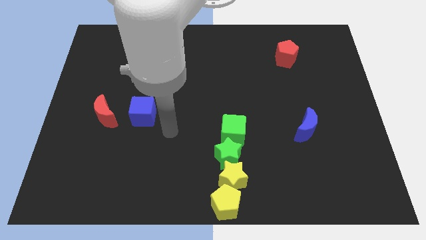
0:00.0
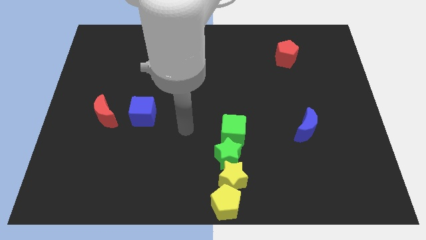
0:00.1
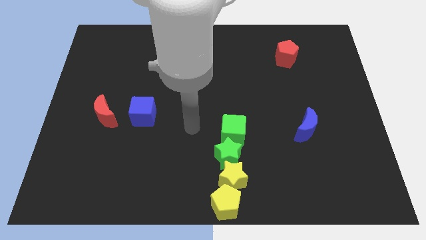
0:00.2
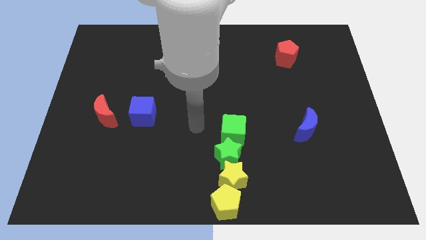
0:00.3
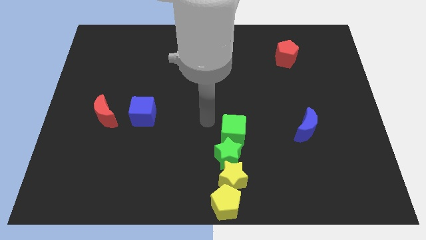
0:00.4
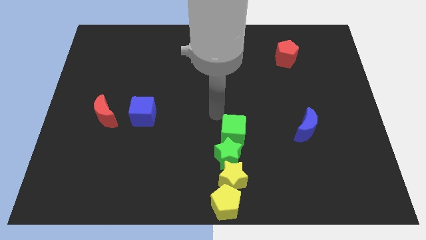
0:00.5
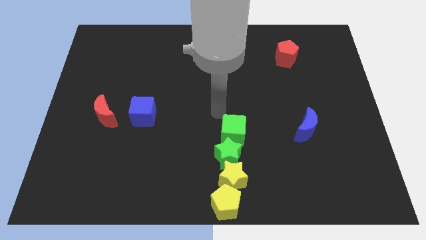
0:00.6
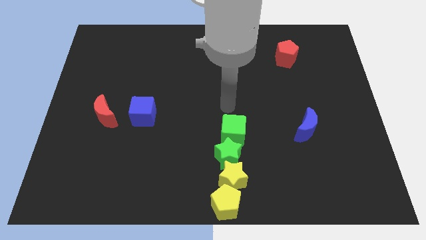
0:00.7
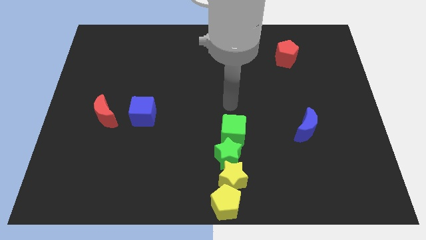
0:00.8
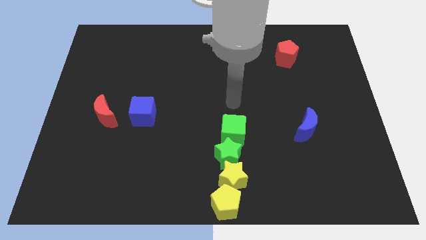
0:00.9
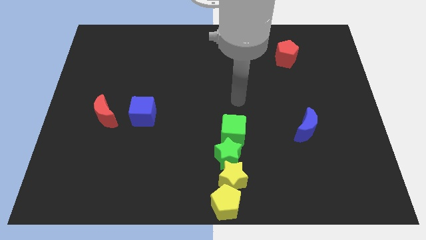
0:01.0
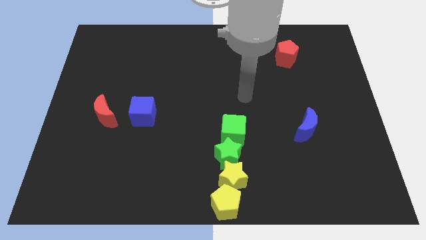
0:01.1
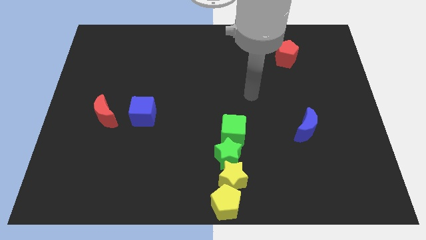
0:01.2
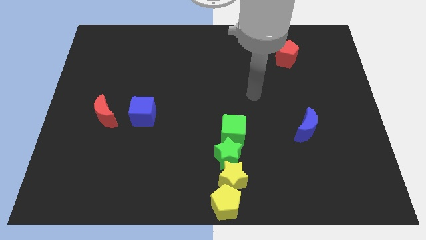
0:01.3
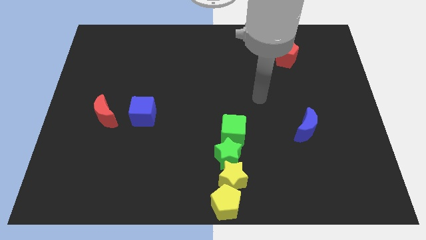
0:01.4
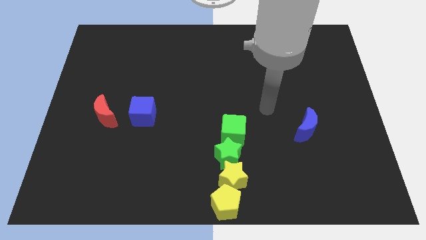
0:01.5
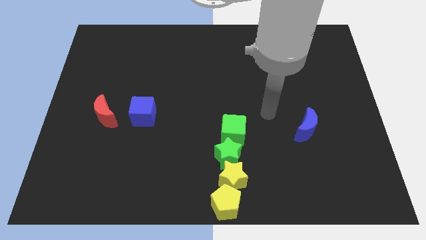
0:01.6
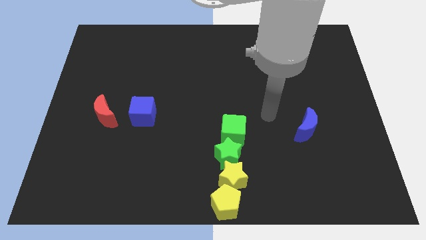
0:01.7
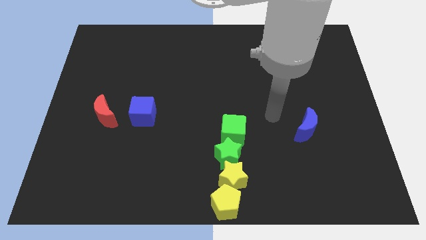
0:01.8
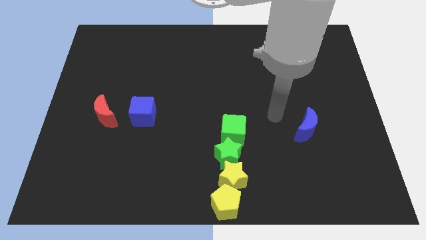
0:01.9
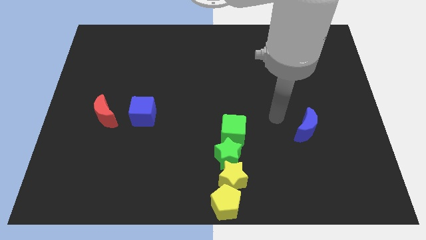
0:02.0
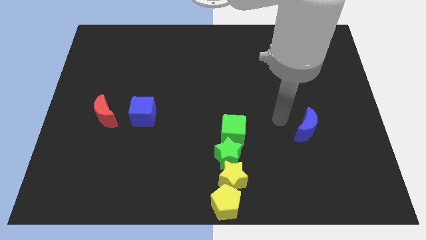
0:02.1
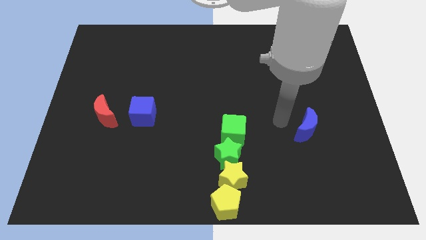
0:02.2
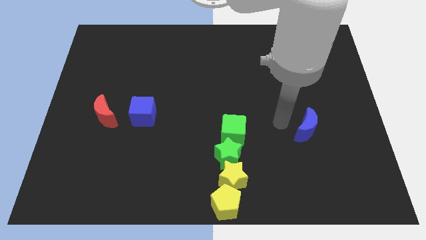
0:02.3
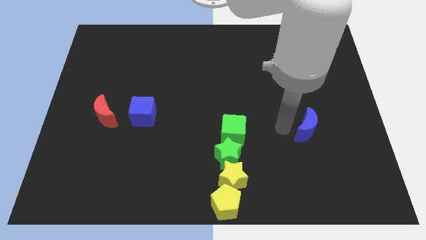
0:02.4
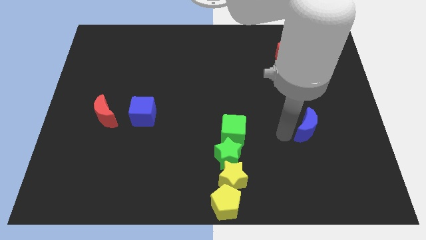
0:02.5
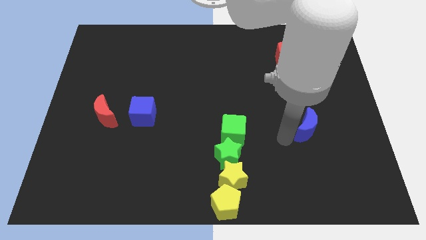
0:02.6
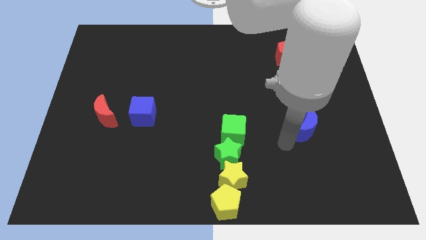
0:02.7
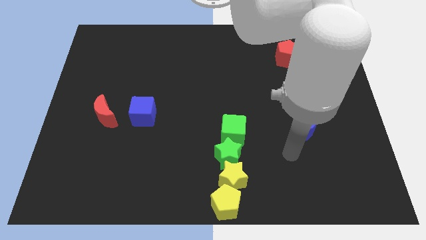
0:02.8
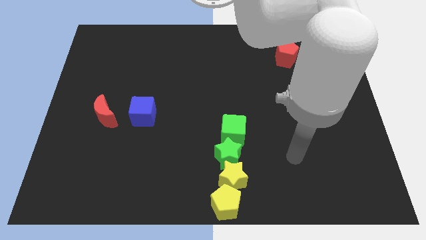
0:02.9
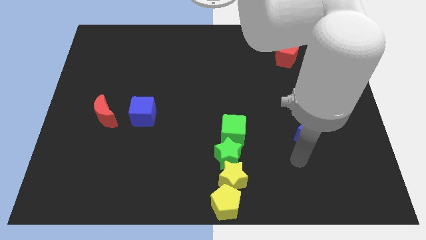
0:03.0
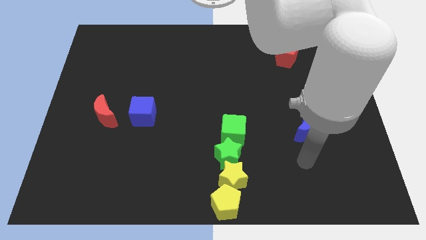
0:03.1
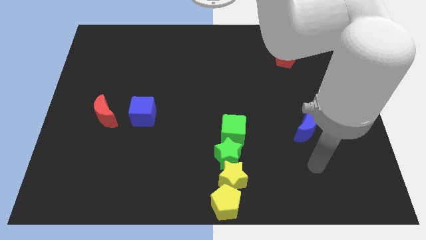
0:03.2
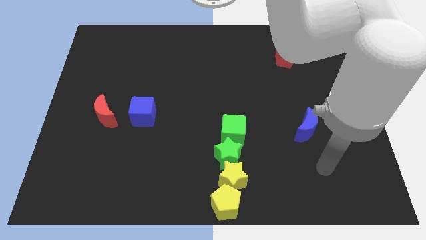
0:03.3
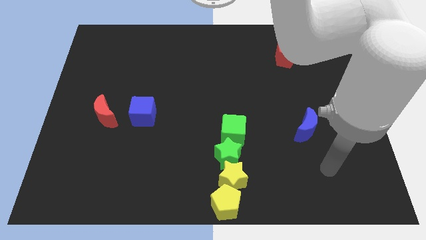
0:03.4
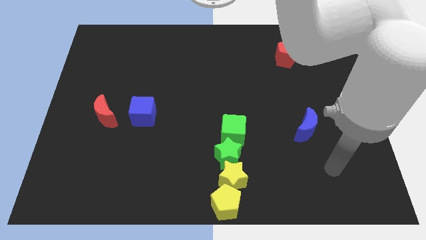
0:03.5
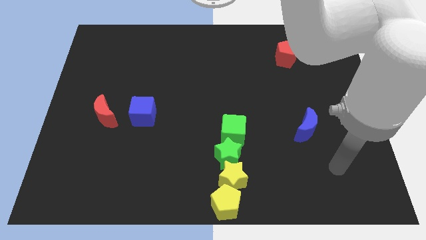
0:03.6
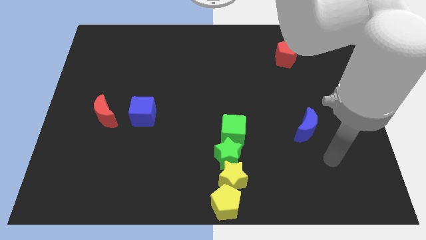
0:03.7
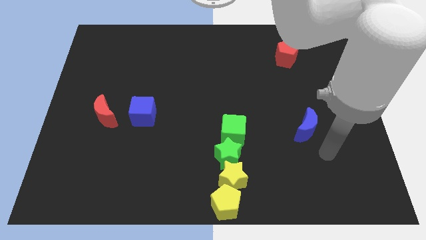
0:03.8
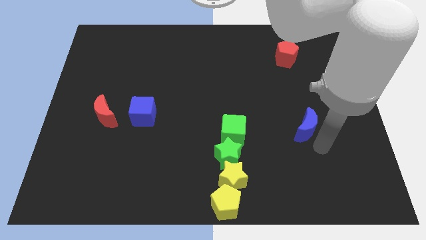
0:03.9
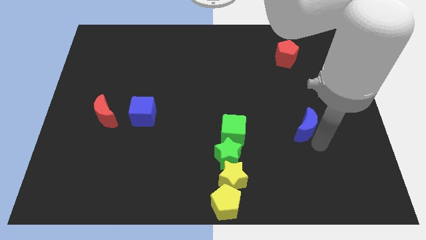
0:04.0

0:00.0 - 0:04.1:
move your arm close to the right side of the blue crescent

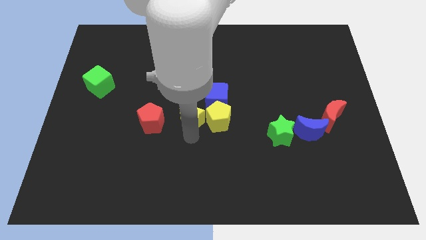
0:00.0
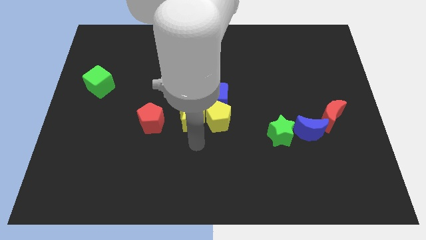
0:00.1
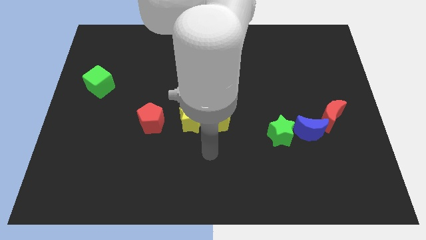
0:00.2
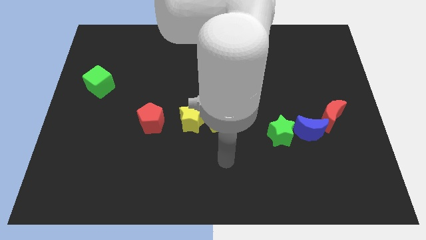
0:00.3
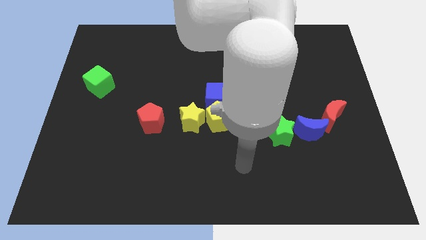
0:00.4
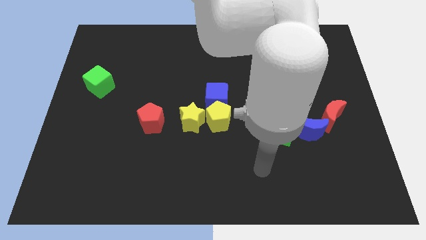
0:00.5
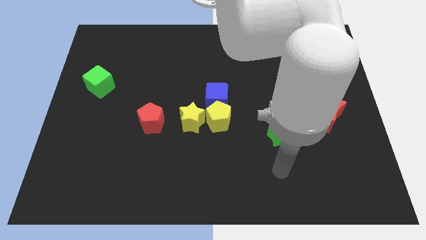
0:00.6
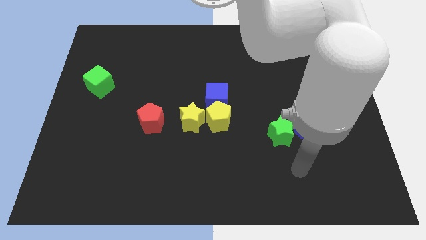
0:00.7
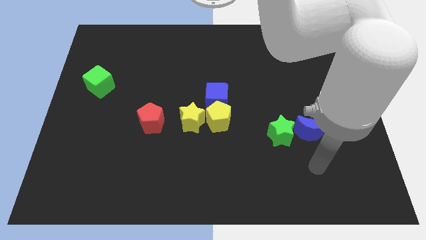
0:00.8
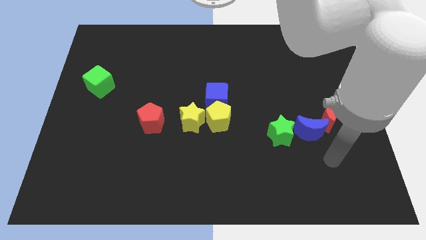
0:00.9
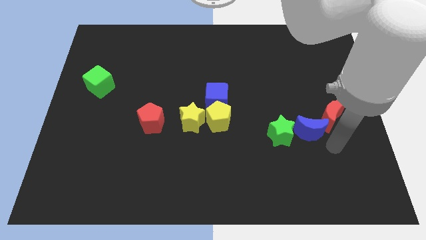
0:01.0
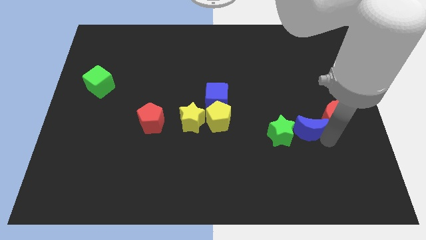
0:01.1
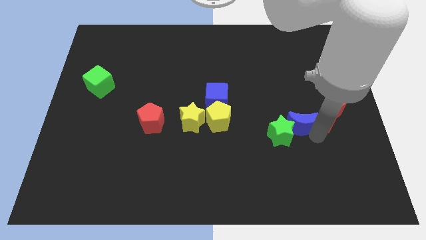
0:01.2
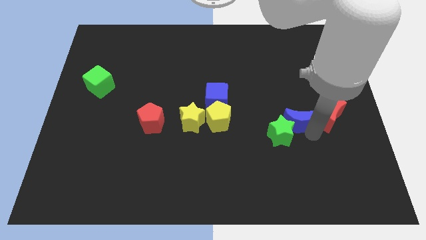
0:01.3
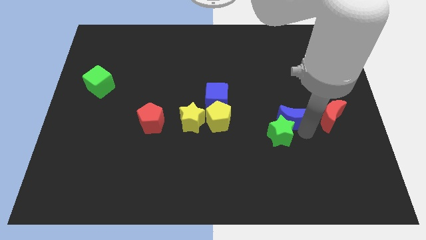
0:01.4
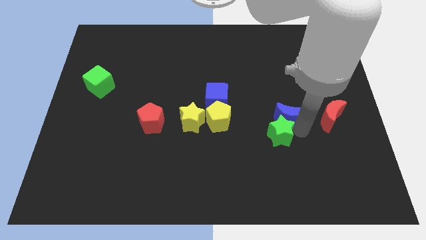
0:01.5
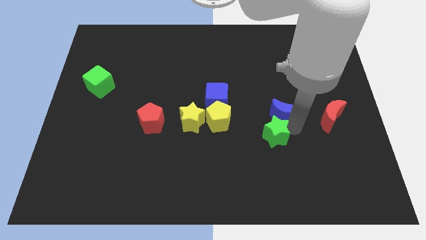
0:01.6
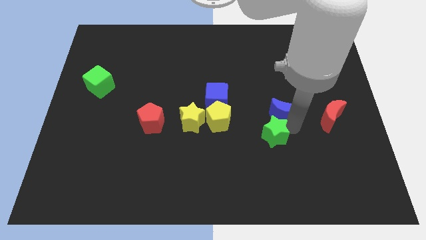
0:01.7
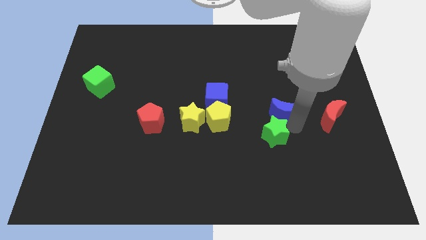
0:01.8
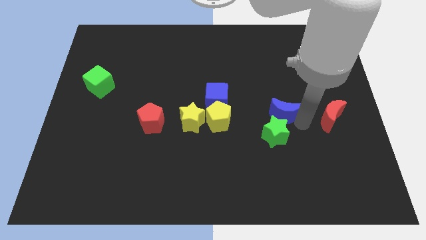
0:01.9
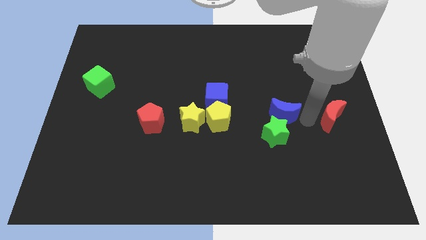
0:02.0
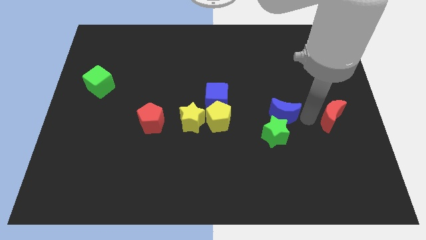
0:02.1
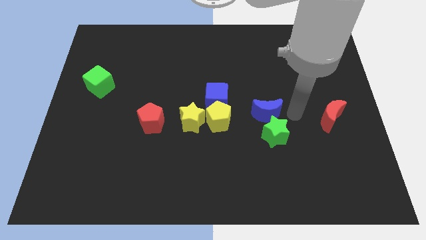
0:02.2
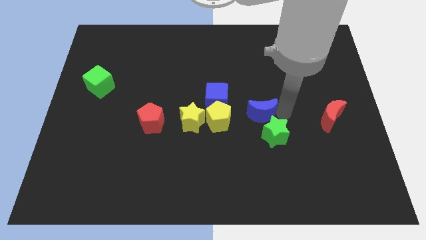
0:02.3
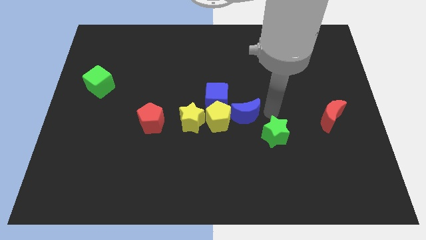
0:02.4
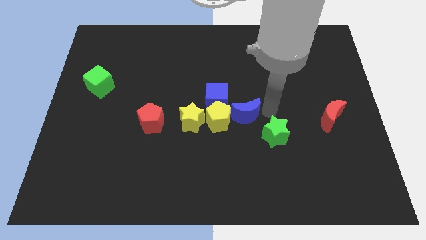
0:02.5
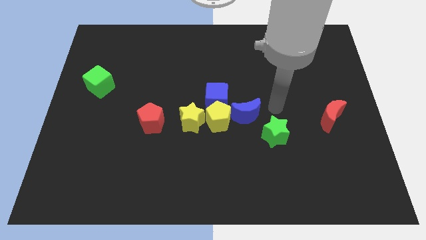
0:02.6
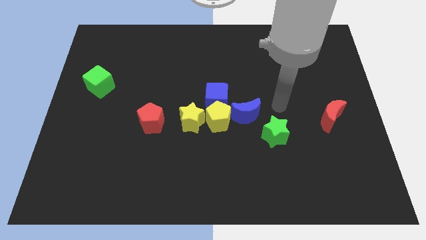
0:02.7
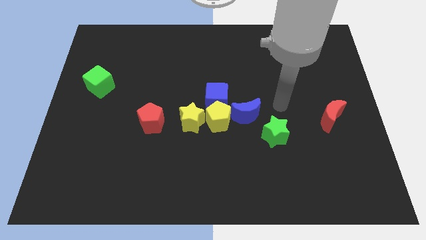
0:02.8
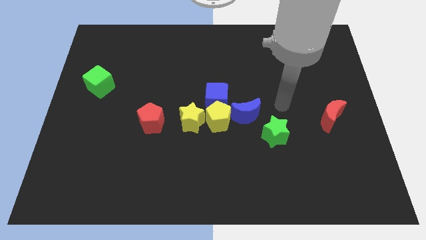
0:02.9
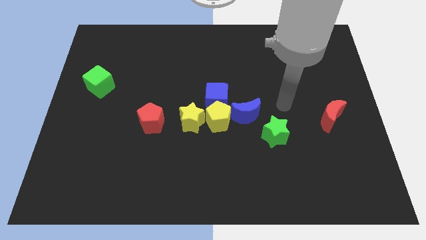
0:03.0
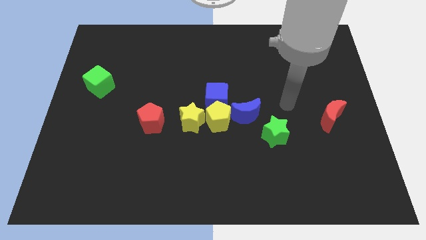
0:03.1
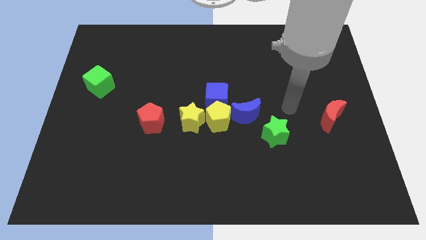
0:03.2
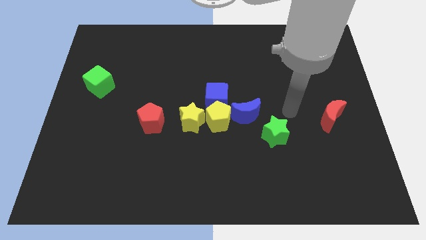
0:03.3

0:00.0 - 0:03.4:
move the blue crescent into the right of yellow pentagon

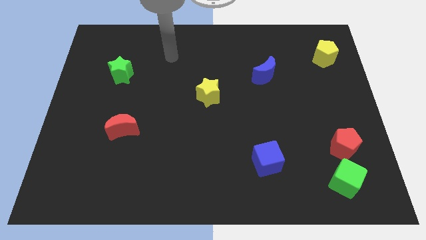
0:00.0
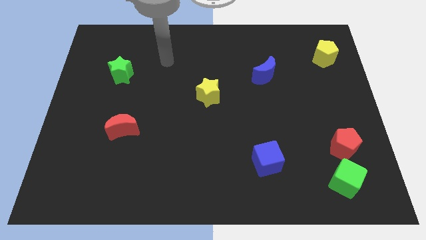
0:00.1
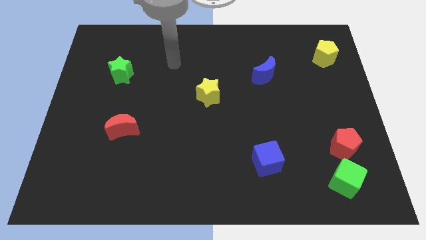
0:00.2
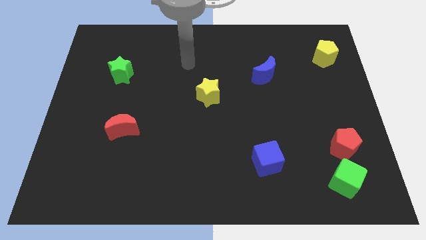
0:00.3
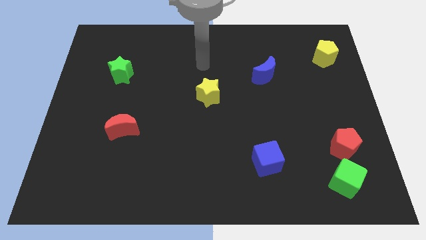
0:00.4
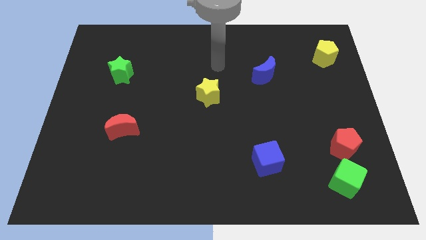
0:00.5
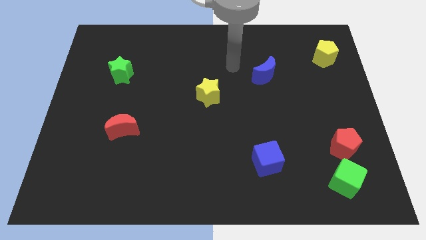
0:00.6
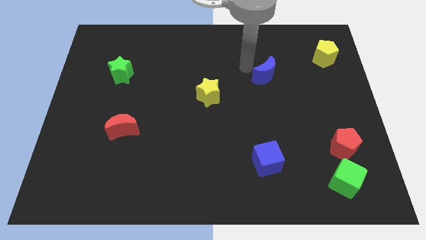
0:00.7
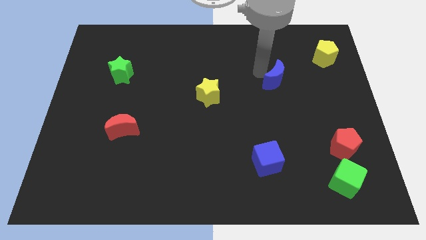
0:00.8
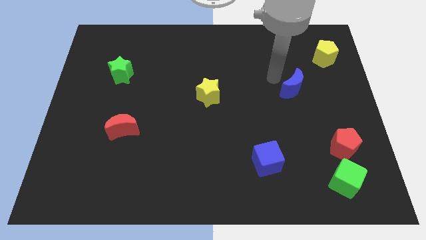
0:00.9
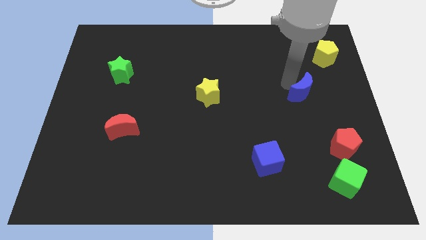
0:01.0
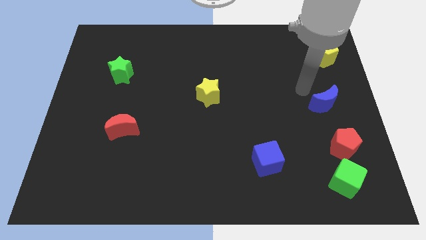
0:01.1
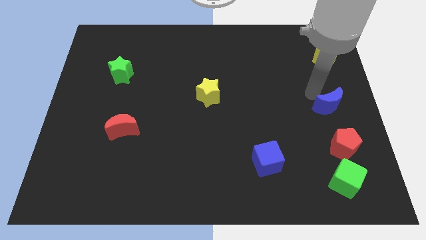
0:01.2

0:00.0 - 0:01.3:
move the blue moon below the yellow pentagon

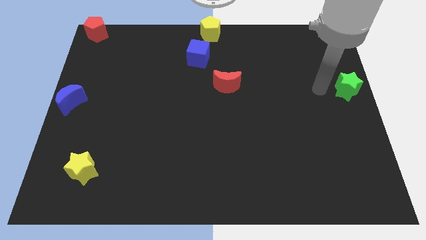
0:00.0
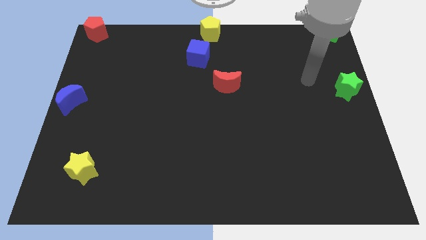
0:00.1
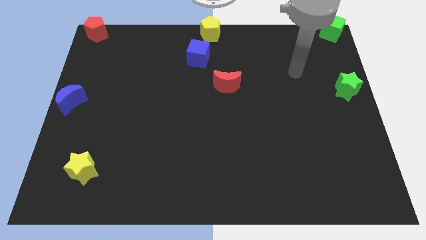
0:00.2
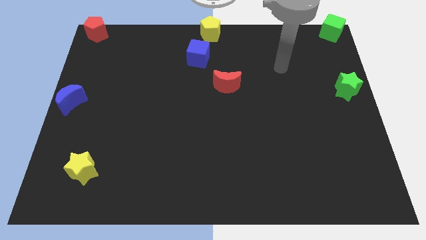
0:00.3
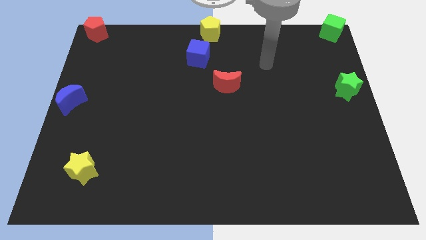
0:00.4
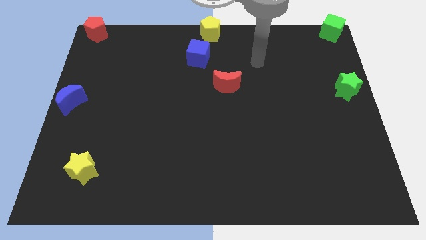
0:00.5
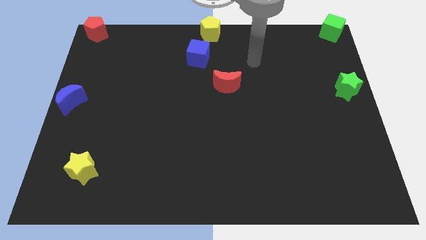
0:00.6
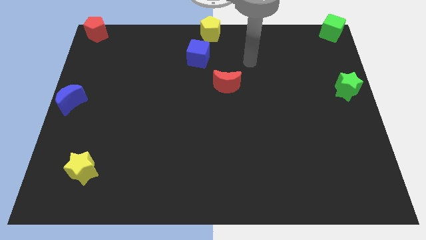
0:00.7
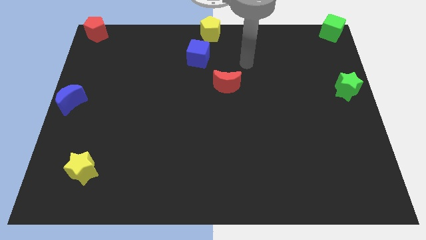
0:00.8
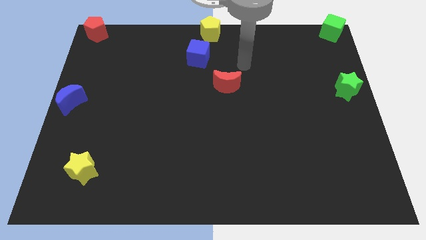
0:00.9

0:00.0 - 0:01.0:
move the arm away from the green star
